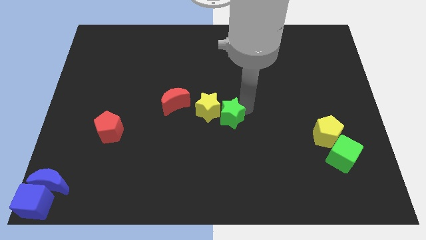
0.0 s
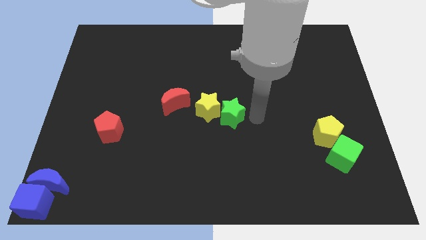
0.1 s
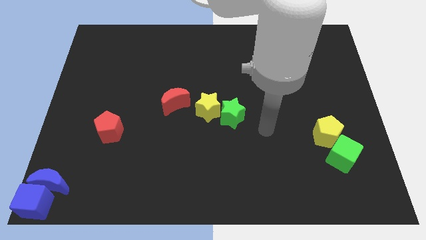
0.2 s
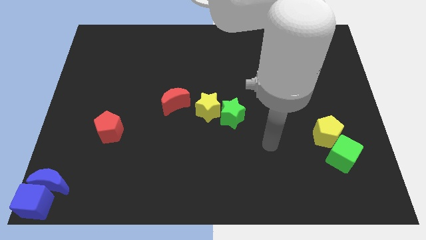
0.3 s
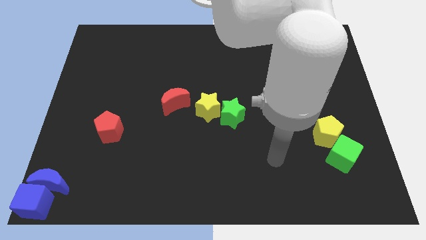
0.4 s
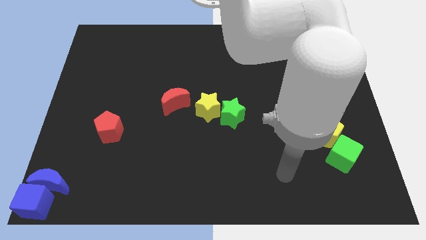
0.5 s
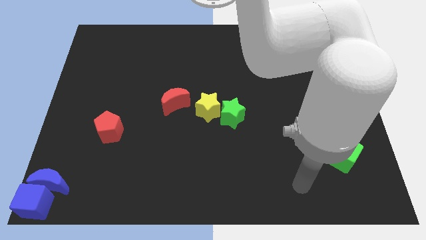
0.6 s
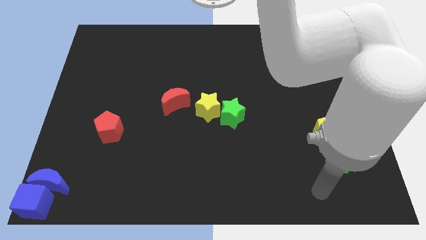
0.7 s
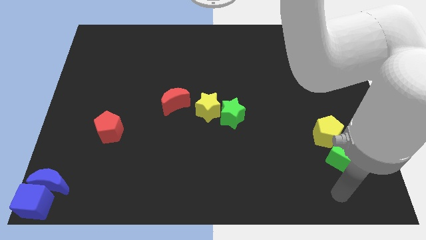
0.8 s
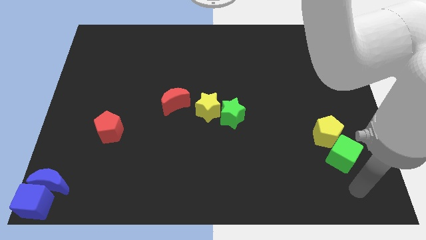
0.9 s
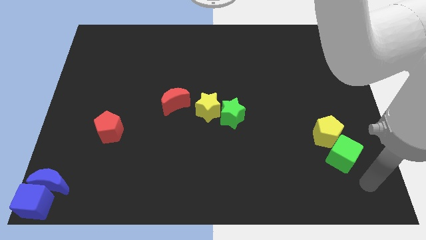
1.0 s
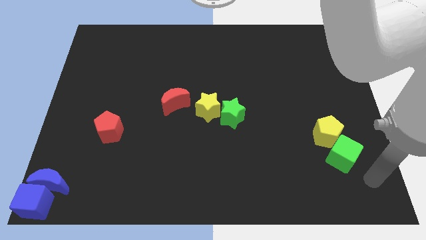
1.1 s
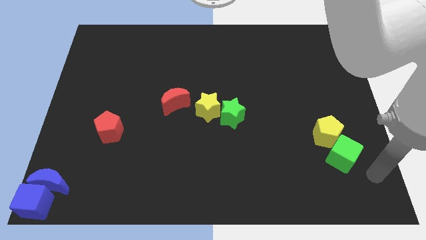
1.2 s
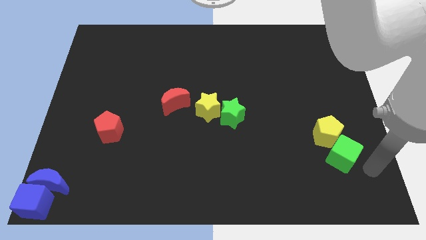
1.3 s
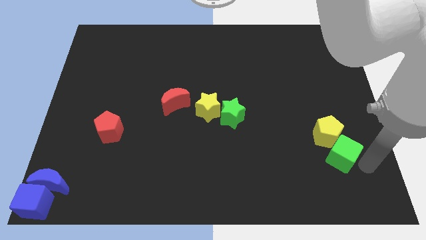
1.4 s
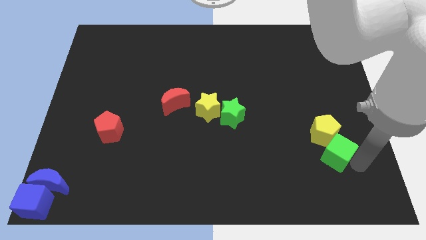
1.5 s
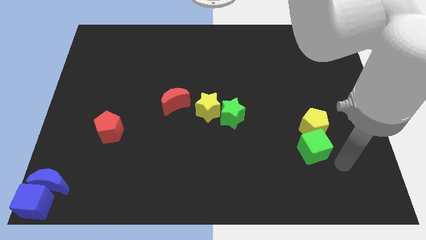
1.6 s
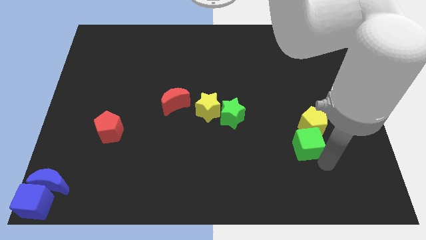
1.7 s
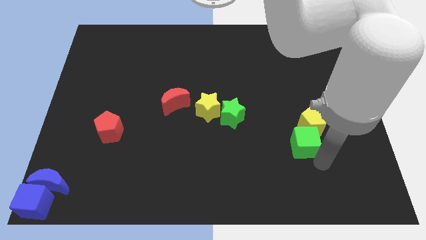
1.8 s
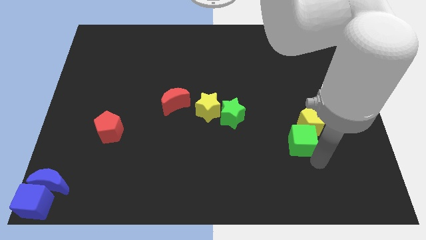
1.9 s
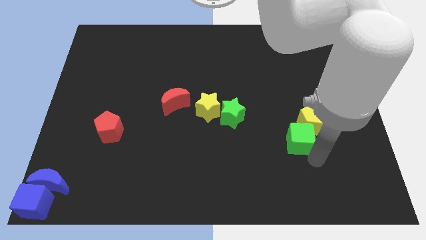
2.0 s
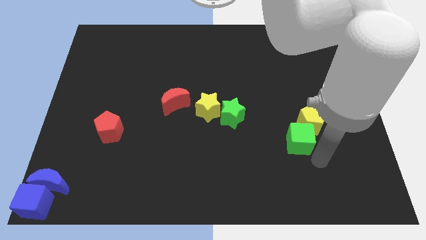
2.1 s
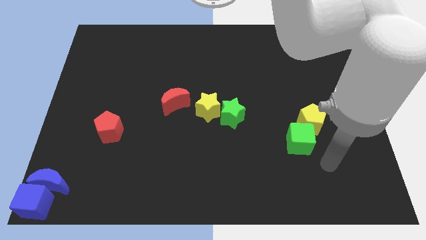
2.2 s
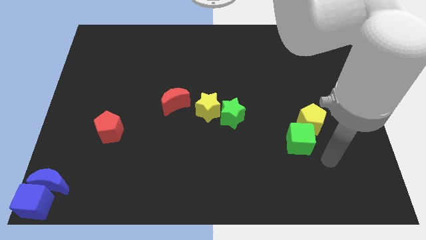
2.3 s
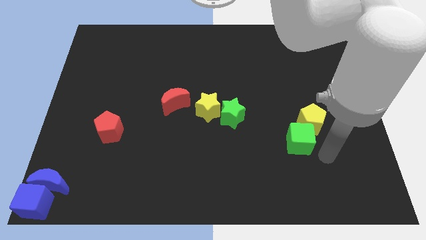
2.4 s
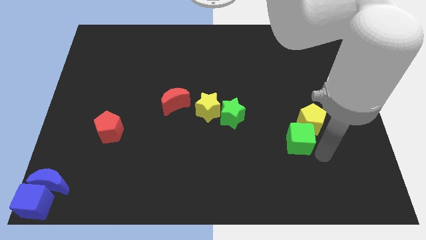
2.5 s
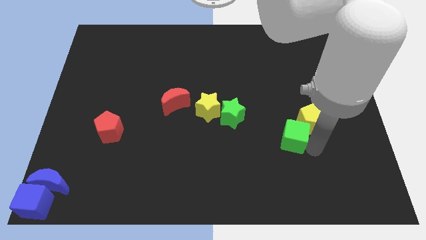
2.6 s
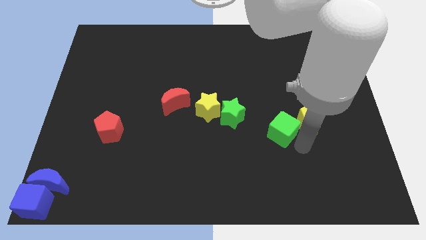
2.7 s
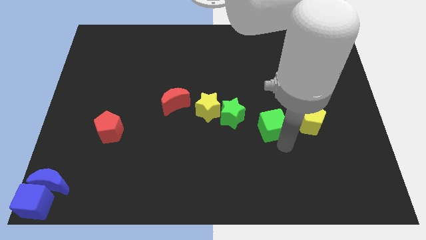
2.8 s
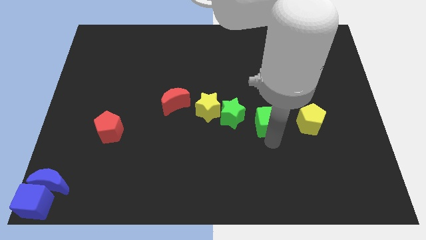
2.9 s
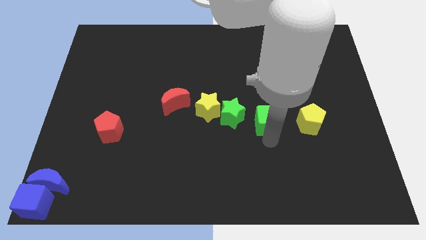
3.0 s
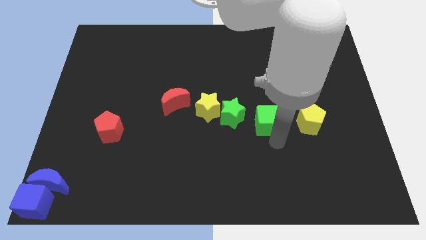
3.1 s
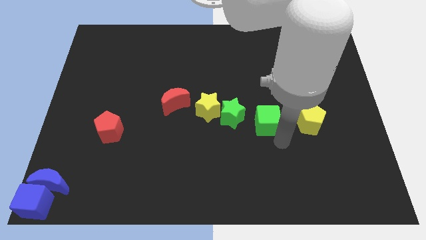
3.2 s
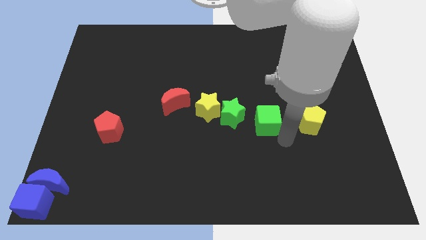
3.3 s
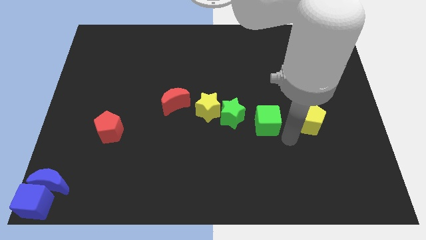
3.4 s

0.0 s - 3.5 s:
slide the green cube to the right side of the green star

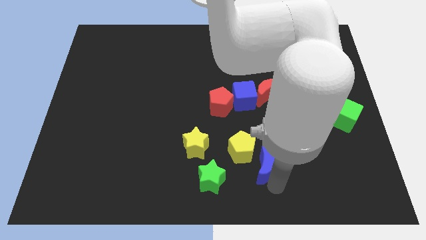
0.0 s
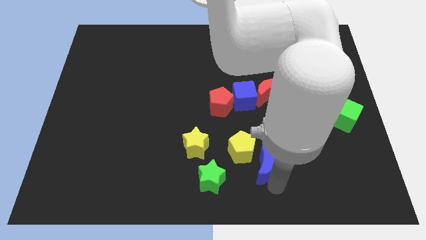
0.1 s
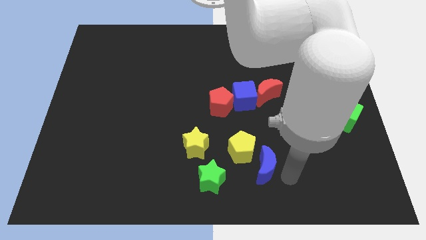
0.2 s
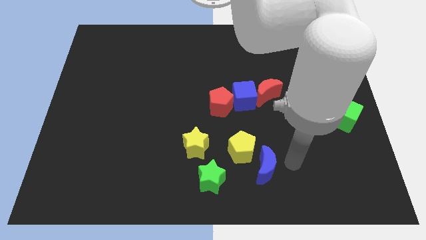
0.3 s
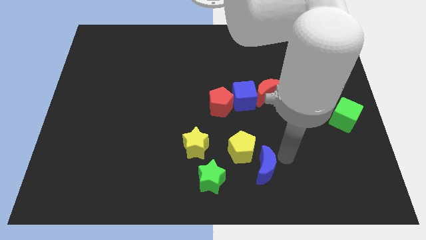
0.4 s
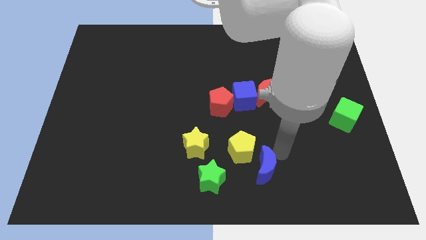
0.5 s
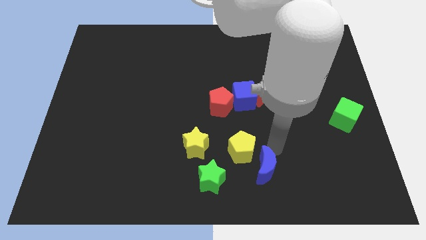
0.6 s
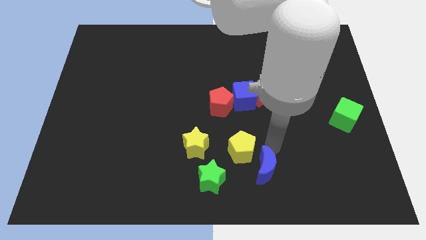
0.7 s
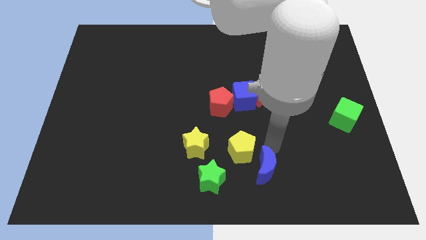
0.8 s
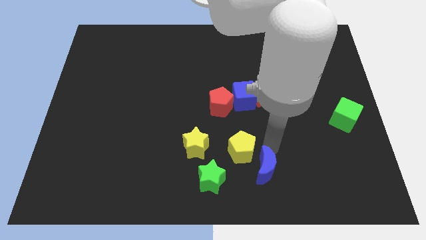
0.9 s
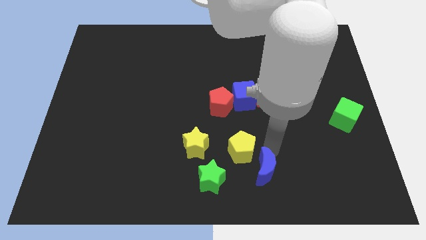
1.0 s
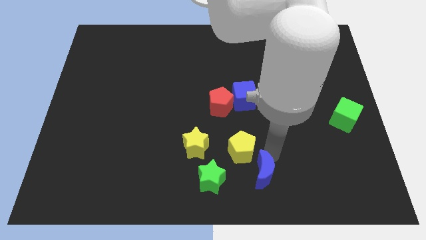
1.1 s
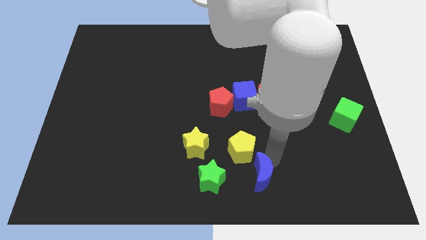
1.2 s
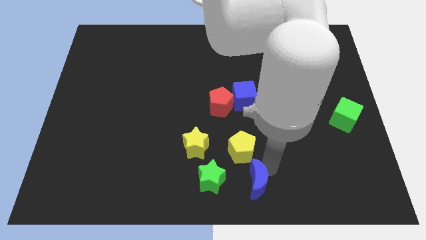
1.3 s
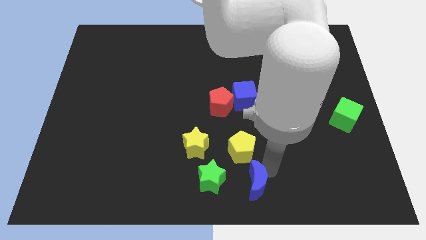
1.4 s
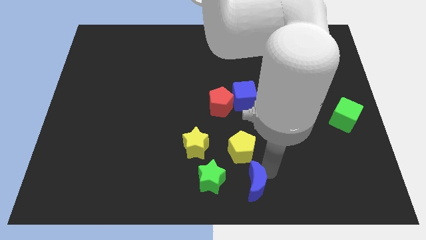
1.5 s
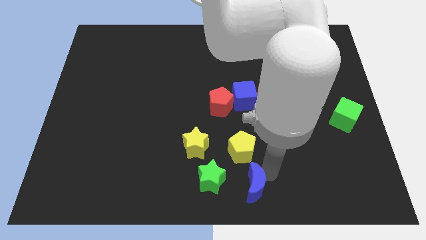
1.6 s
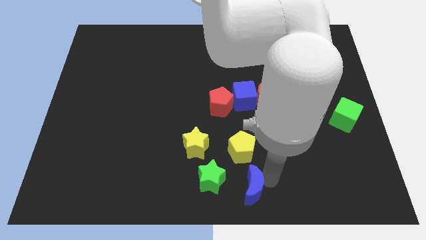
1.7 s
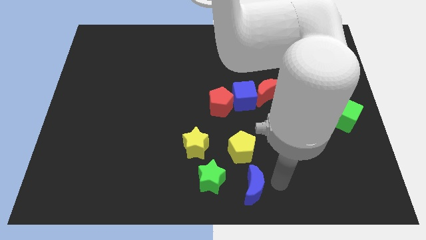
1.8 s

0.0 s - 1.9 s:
move the blue crescent to the bottom of the yellow pentagon

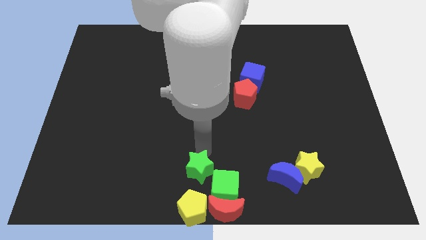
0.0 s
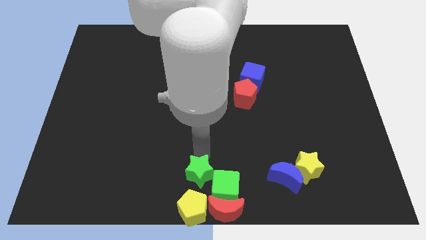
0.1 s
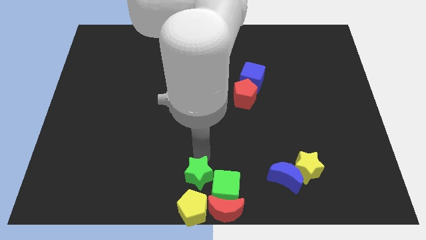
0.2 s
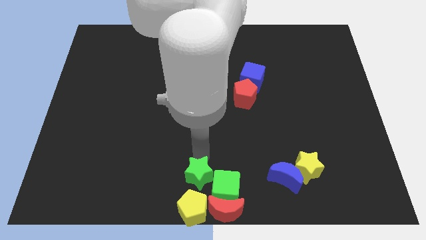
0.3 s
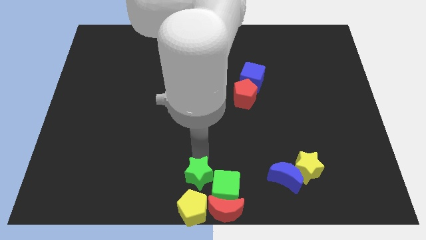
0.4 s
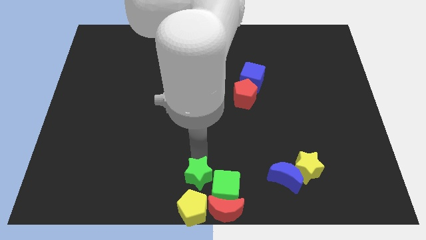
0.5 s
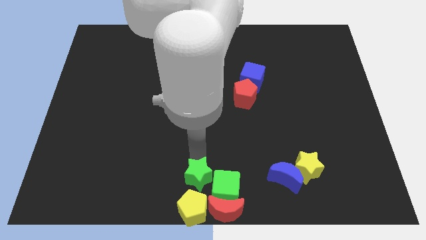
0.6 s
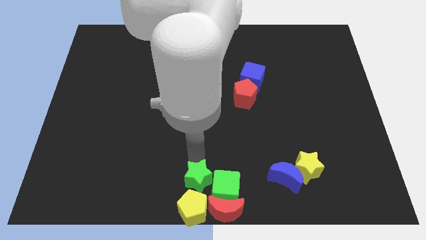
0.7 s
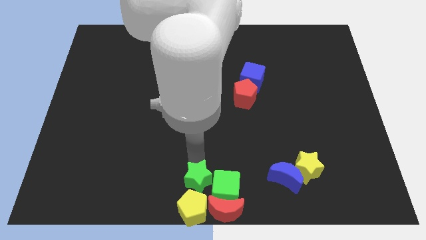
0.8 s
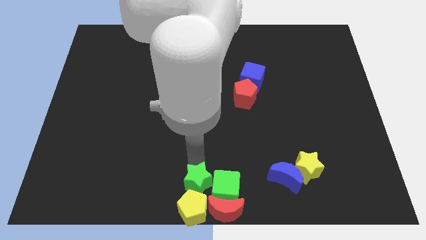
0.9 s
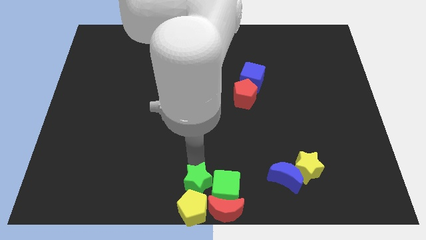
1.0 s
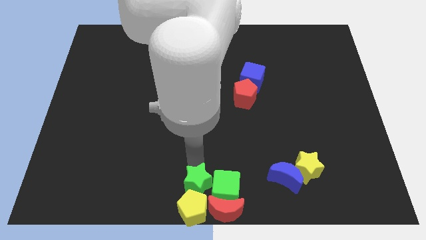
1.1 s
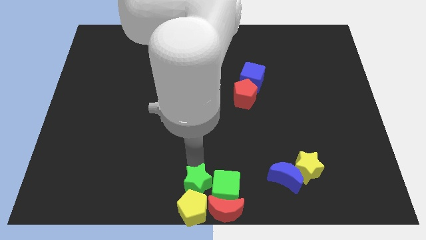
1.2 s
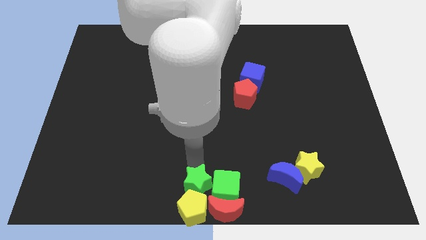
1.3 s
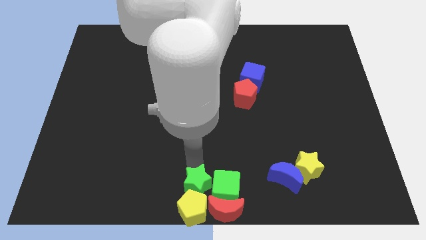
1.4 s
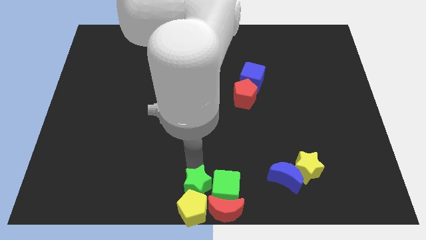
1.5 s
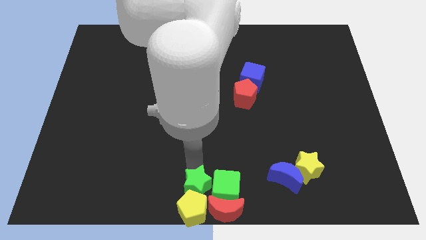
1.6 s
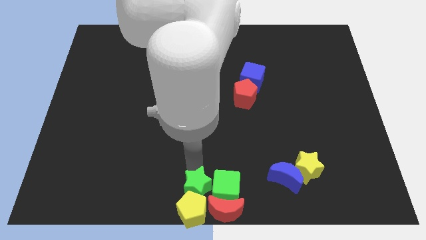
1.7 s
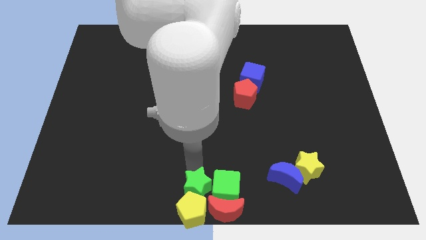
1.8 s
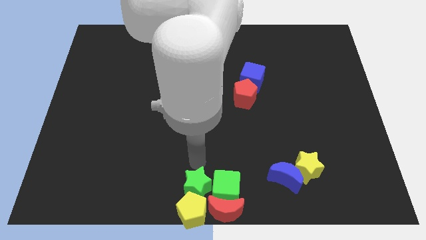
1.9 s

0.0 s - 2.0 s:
place the green star above the yellow pentagon

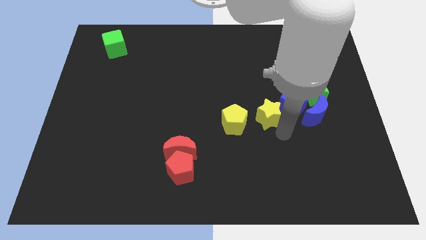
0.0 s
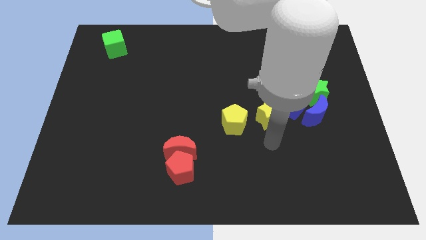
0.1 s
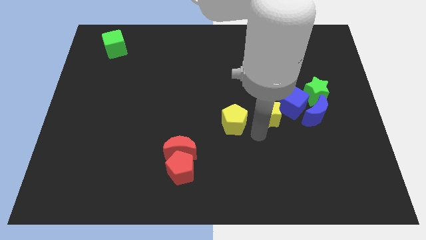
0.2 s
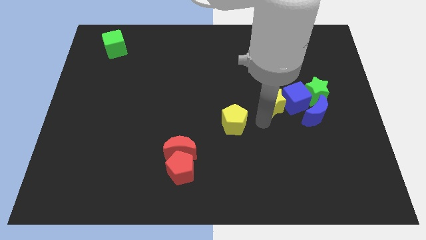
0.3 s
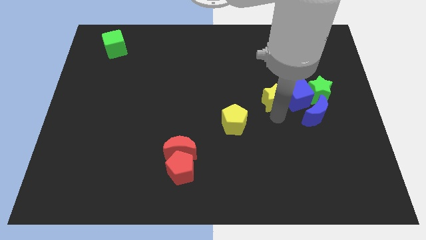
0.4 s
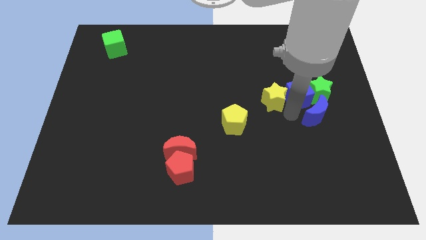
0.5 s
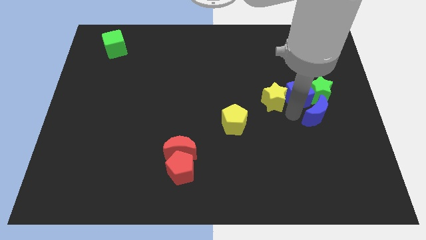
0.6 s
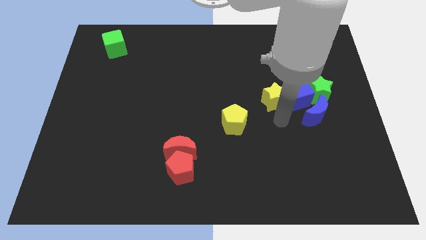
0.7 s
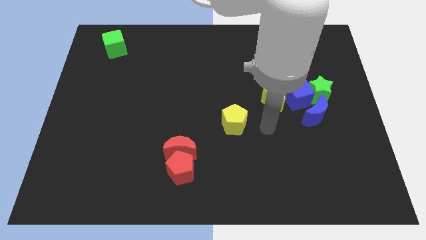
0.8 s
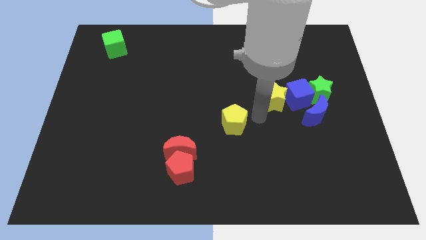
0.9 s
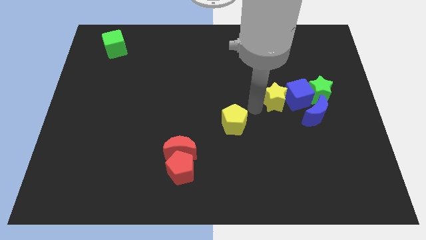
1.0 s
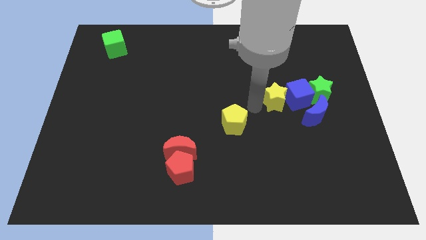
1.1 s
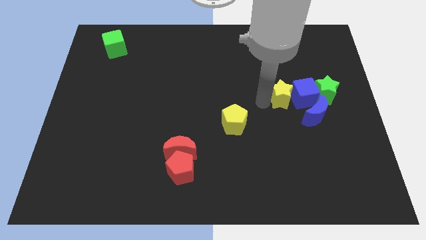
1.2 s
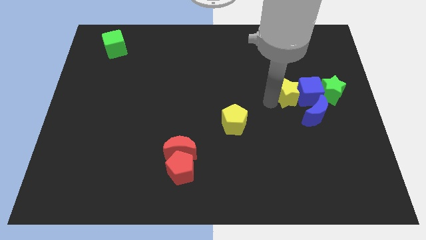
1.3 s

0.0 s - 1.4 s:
put the yellow star into the blue cube

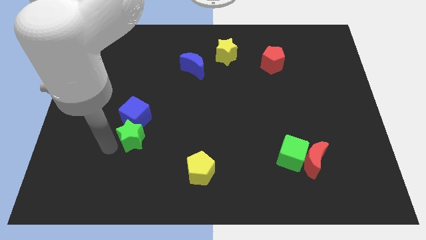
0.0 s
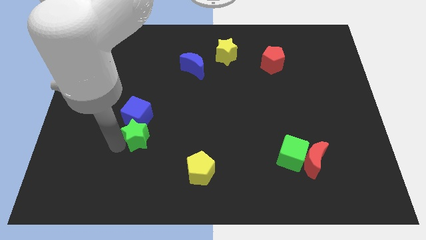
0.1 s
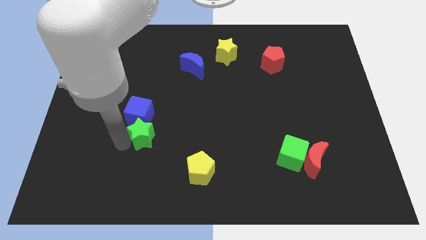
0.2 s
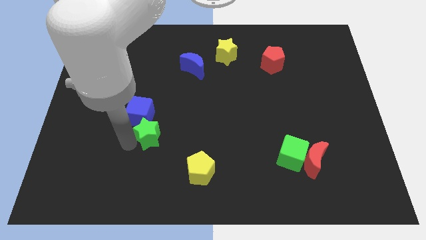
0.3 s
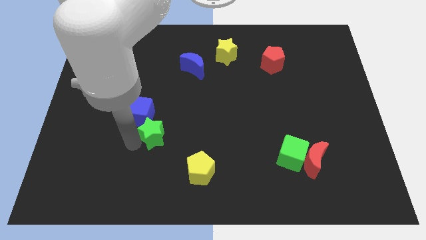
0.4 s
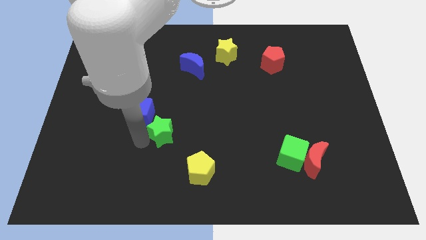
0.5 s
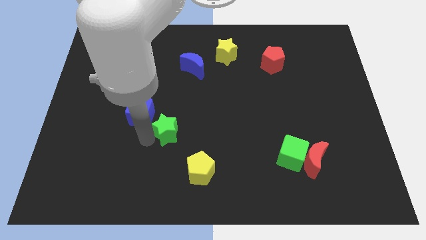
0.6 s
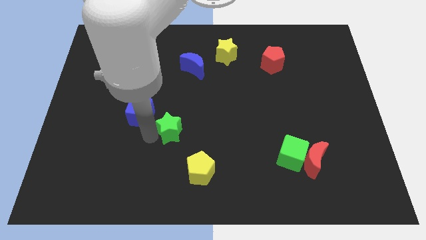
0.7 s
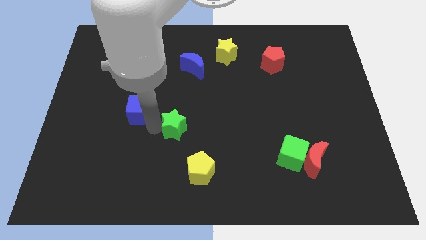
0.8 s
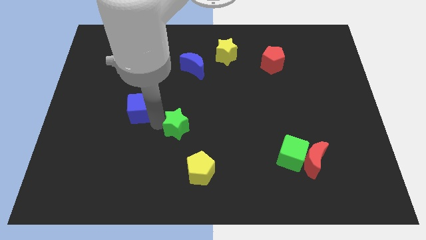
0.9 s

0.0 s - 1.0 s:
move a blue cube with a green star
